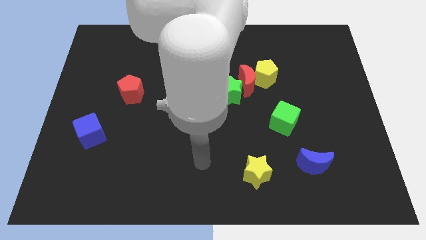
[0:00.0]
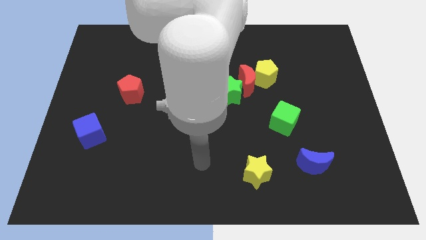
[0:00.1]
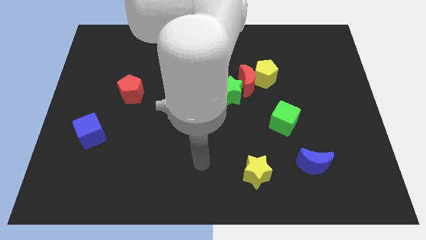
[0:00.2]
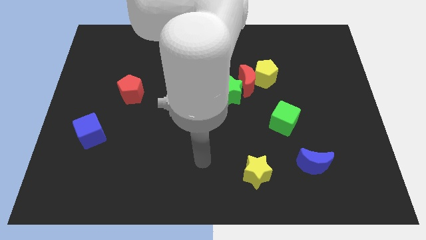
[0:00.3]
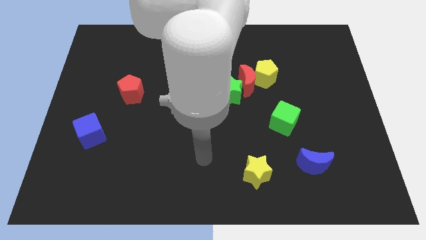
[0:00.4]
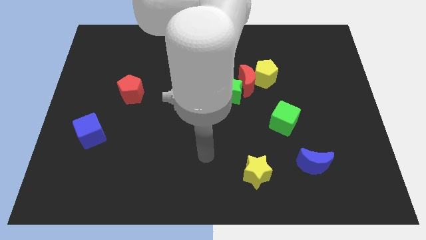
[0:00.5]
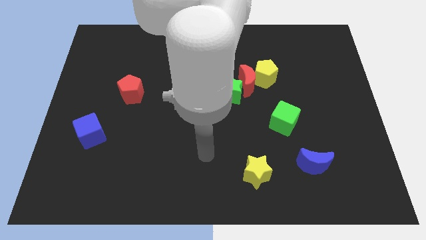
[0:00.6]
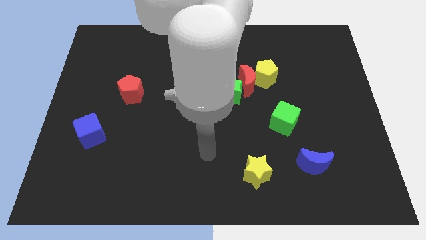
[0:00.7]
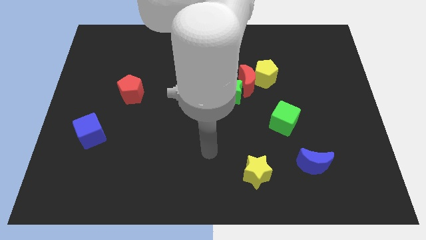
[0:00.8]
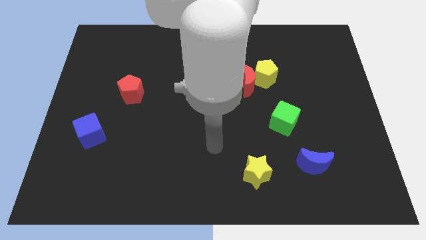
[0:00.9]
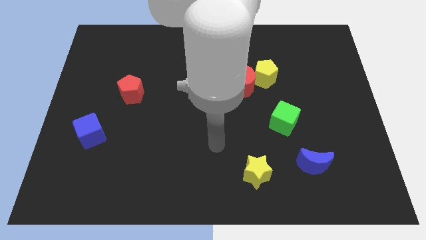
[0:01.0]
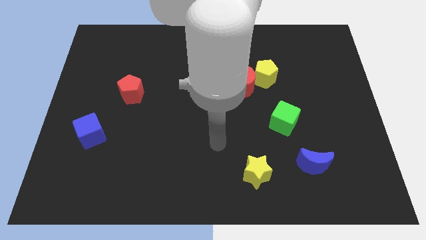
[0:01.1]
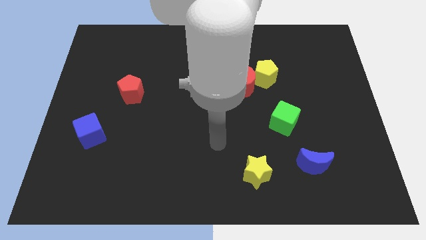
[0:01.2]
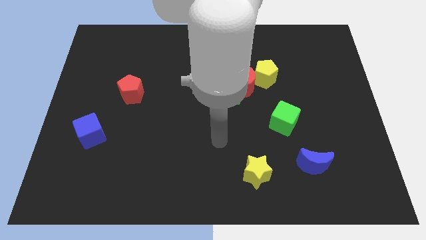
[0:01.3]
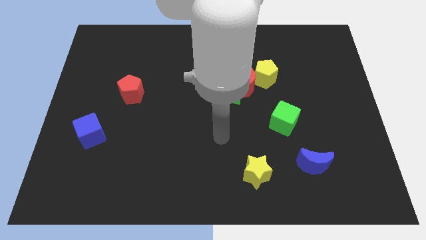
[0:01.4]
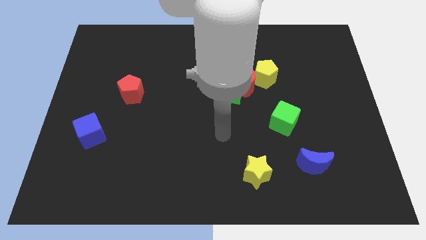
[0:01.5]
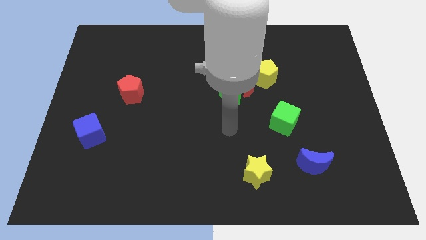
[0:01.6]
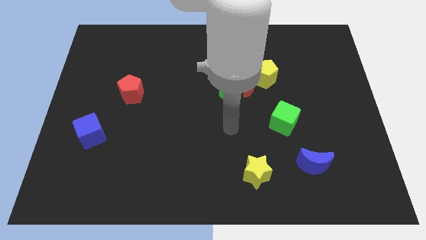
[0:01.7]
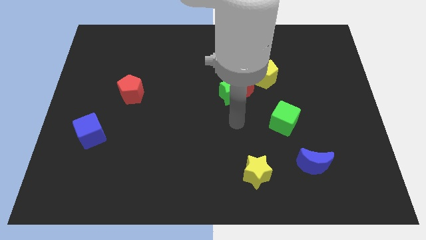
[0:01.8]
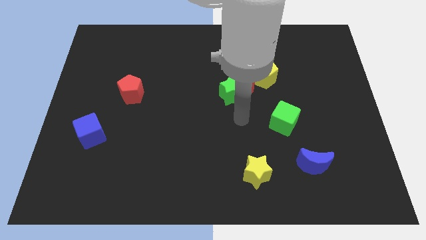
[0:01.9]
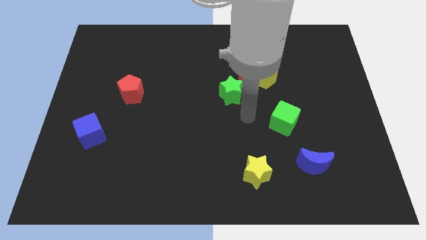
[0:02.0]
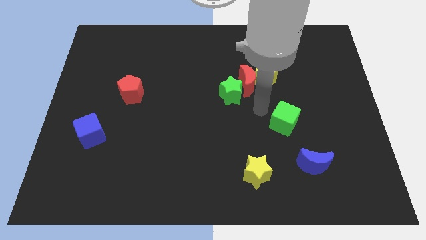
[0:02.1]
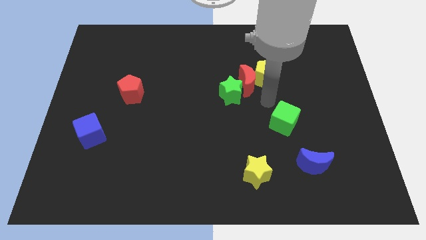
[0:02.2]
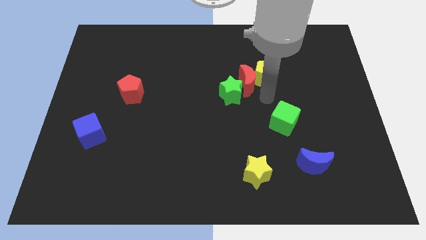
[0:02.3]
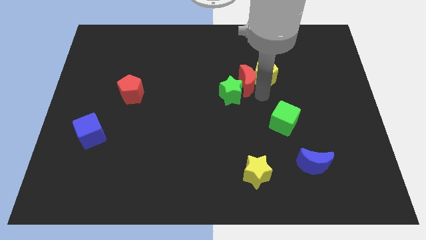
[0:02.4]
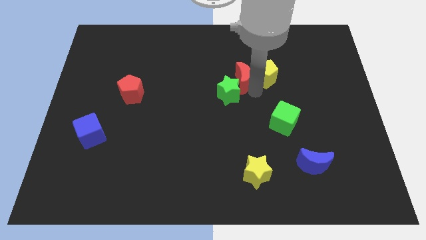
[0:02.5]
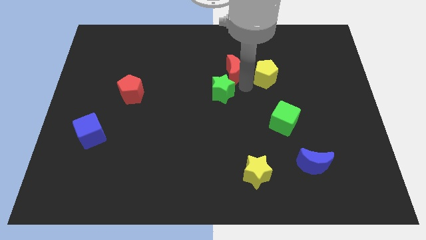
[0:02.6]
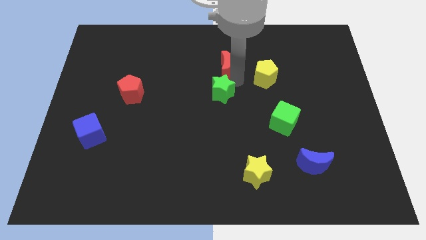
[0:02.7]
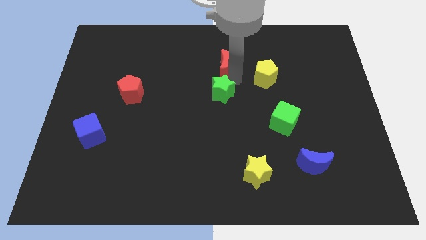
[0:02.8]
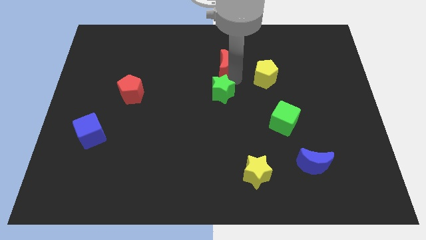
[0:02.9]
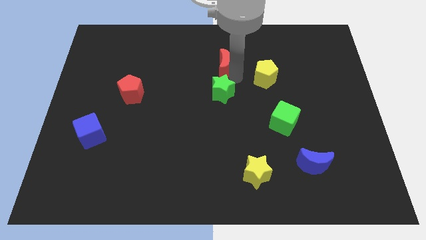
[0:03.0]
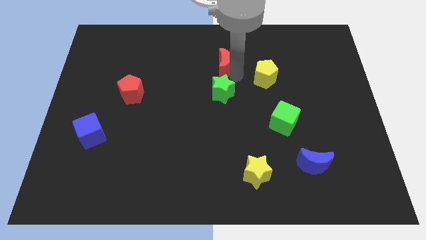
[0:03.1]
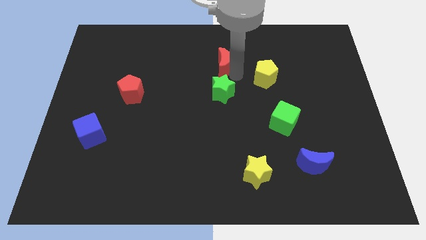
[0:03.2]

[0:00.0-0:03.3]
push the red moon at the top of the green star

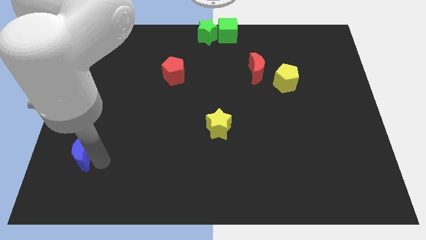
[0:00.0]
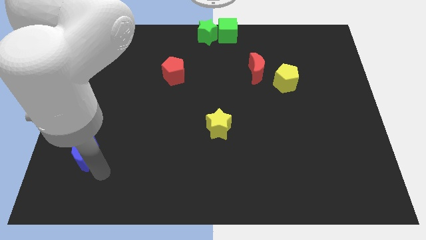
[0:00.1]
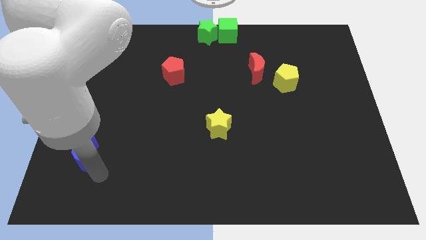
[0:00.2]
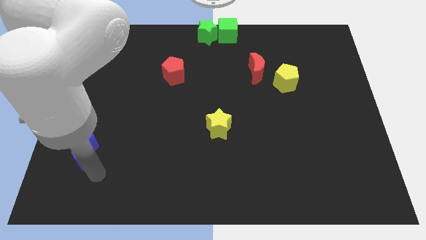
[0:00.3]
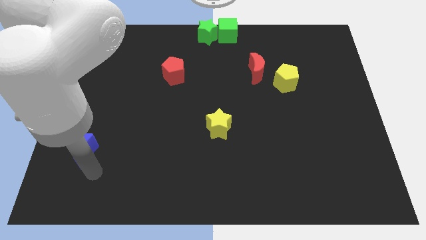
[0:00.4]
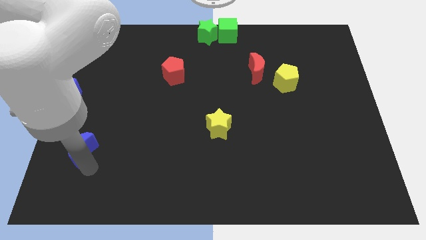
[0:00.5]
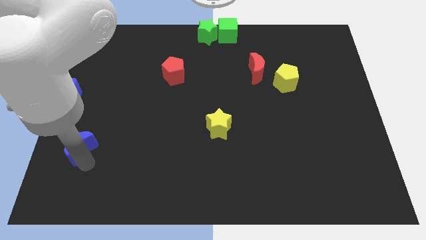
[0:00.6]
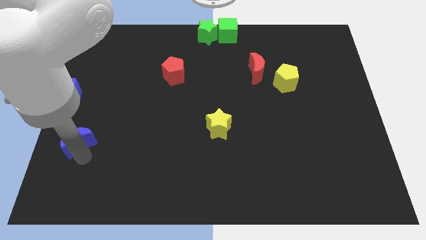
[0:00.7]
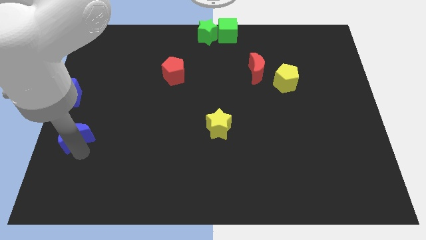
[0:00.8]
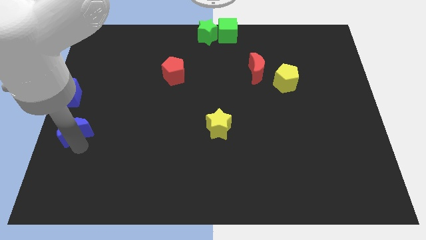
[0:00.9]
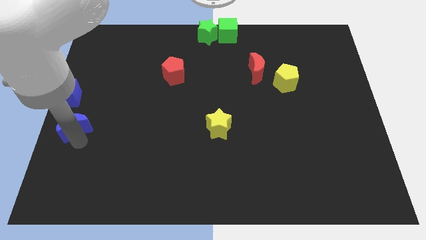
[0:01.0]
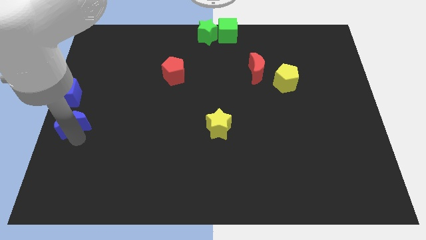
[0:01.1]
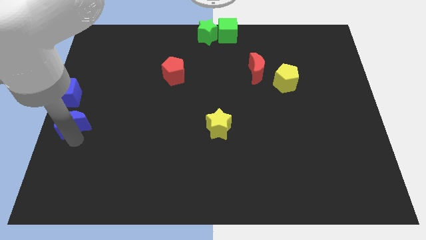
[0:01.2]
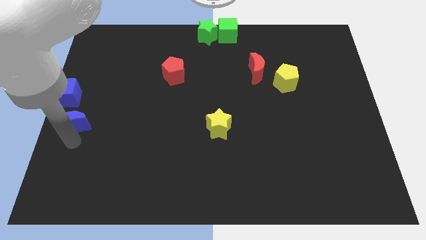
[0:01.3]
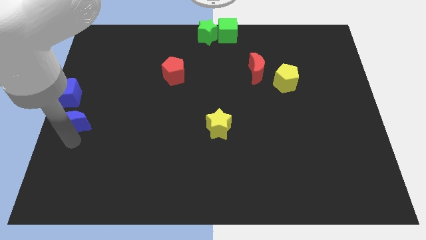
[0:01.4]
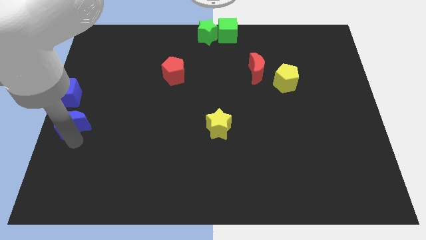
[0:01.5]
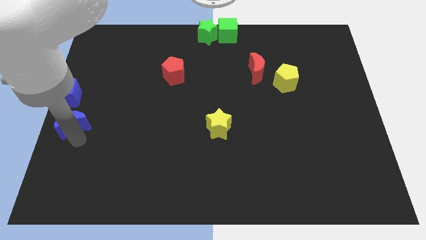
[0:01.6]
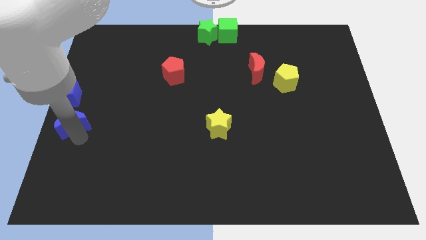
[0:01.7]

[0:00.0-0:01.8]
place blue crescent below blue cube

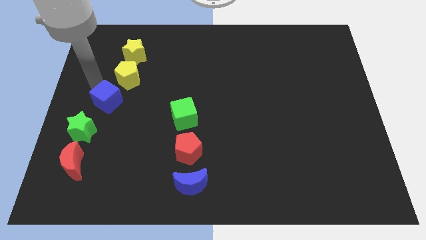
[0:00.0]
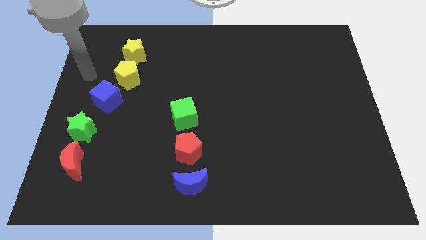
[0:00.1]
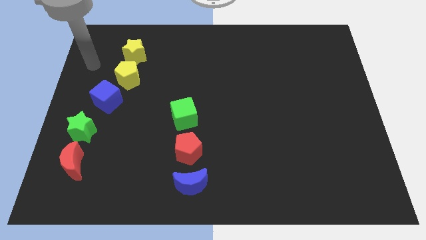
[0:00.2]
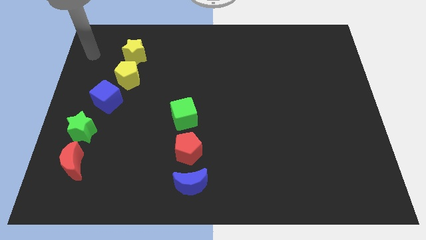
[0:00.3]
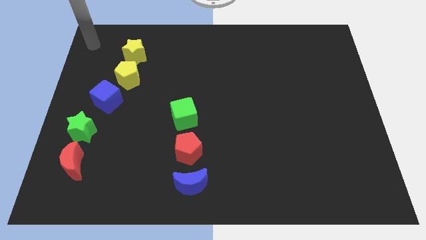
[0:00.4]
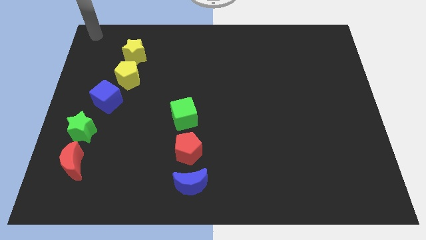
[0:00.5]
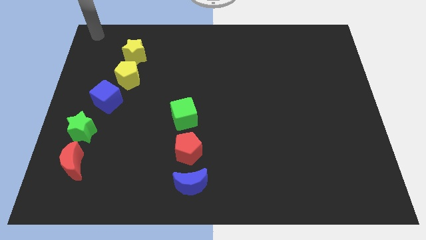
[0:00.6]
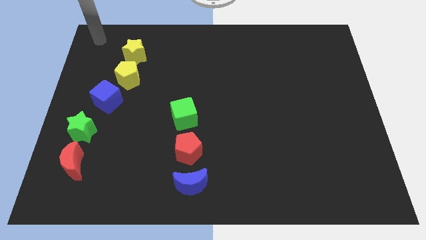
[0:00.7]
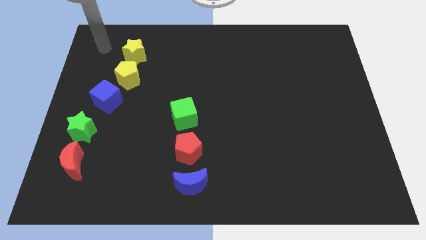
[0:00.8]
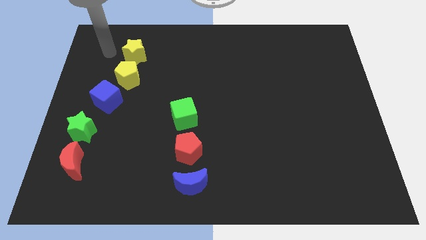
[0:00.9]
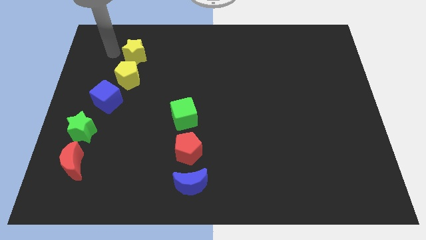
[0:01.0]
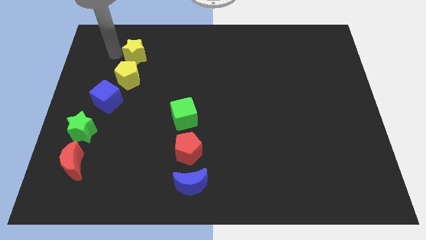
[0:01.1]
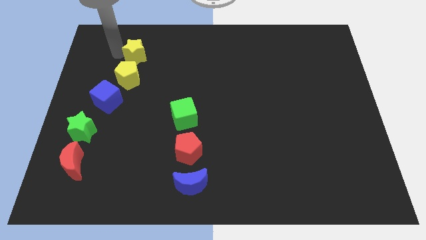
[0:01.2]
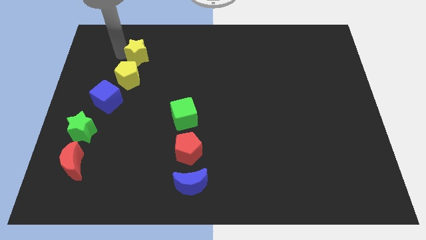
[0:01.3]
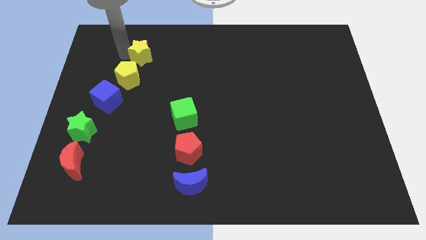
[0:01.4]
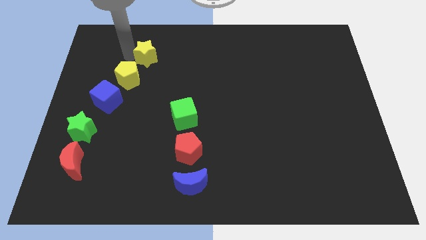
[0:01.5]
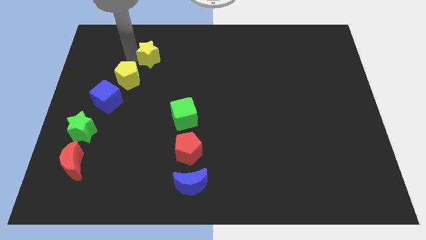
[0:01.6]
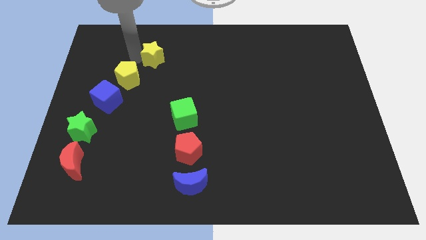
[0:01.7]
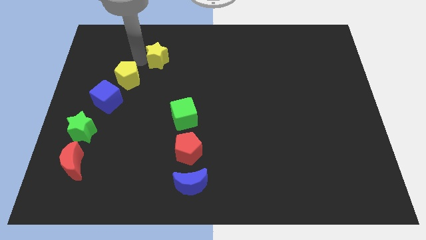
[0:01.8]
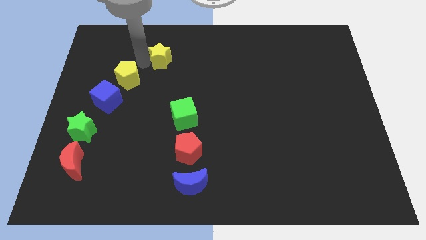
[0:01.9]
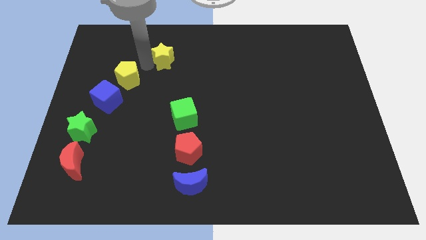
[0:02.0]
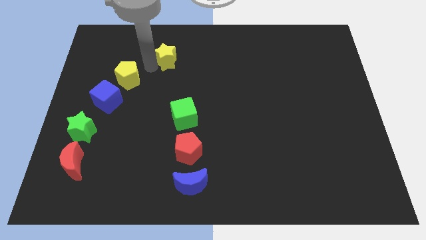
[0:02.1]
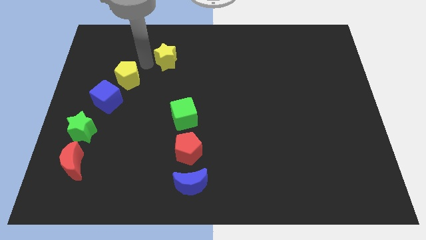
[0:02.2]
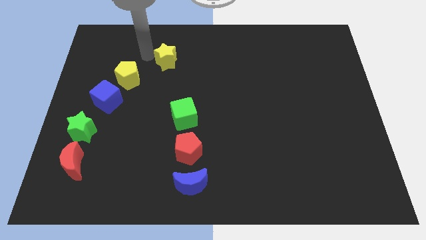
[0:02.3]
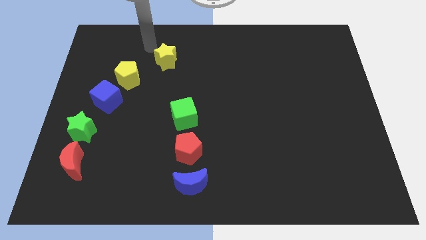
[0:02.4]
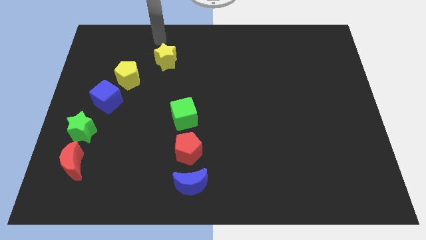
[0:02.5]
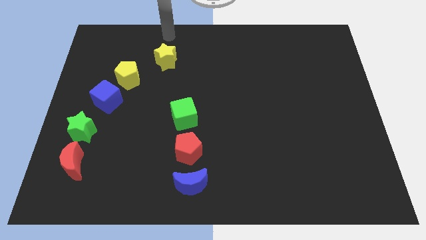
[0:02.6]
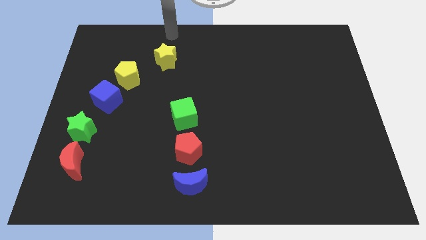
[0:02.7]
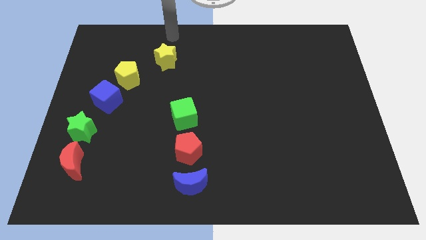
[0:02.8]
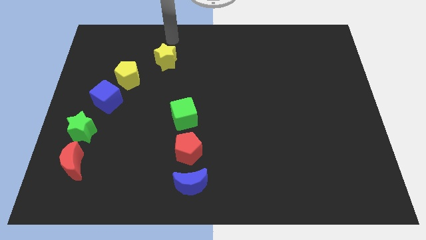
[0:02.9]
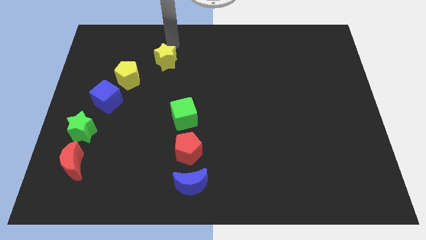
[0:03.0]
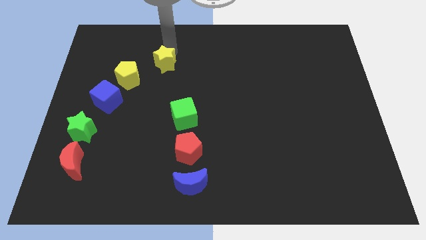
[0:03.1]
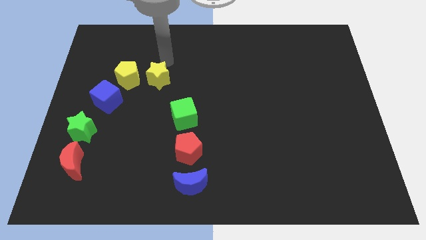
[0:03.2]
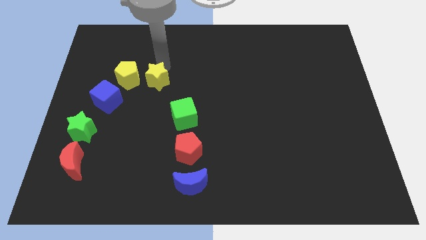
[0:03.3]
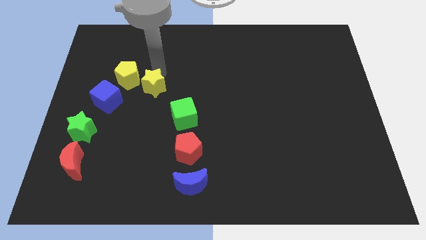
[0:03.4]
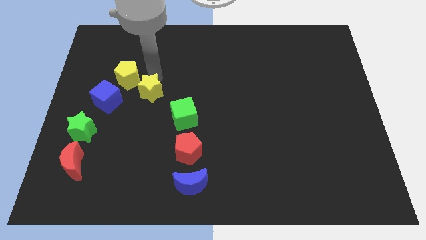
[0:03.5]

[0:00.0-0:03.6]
place the yellow star to the right side of yellow pentagon

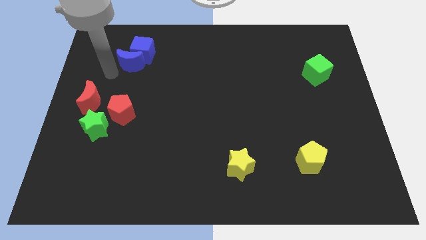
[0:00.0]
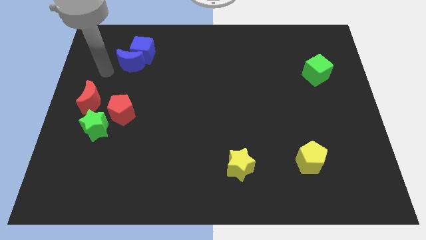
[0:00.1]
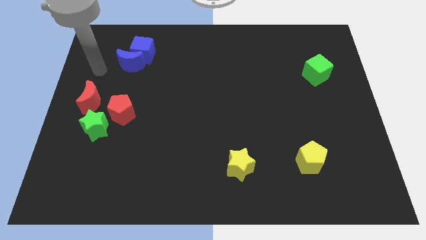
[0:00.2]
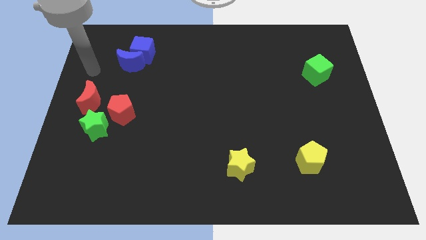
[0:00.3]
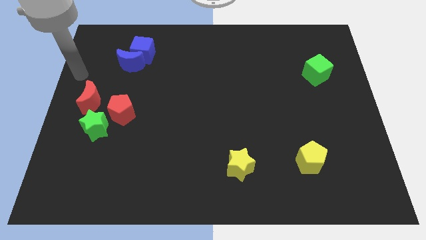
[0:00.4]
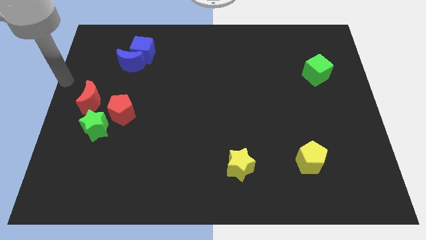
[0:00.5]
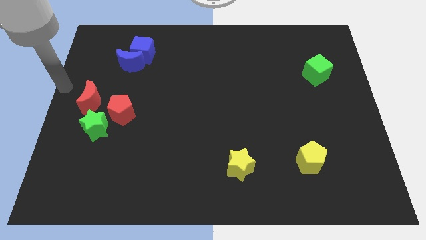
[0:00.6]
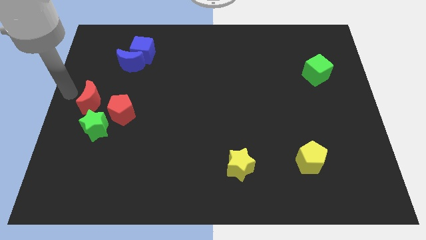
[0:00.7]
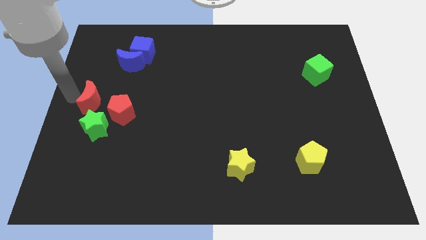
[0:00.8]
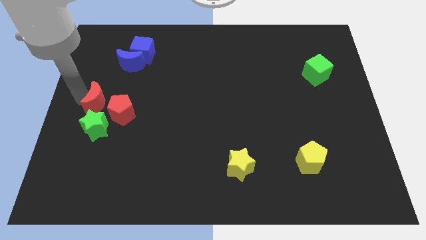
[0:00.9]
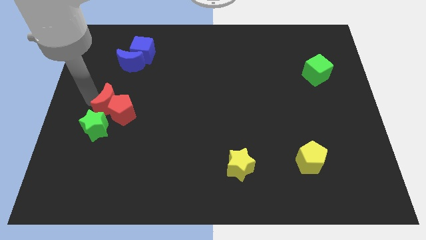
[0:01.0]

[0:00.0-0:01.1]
place the red crescent to the left of the red pentagon
